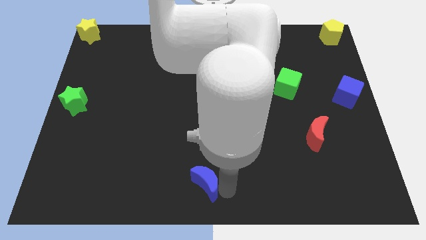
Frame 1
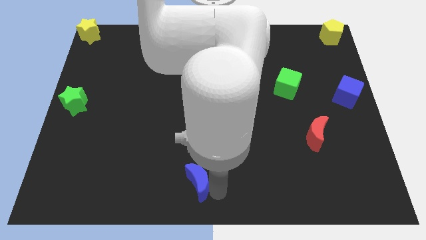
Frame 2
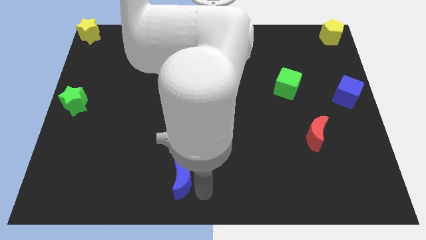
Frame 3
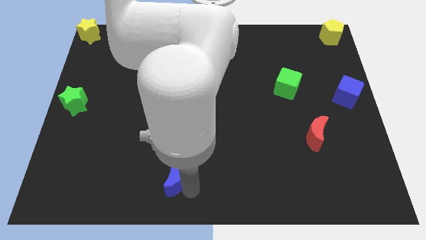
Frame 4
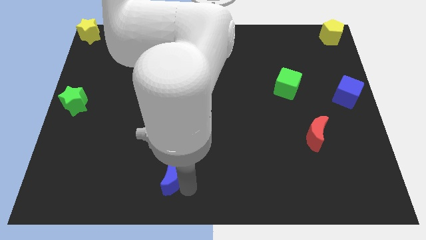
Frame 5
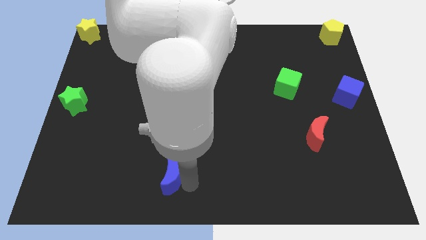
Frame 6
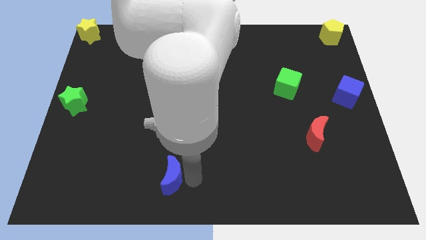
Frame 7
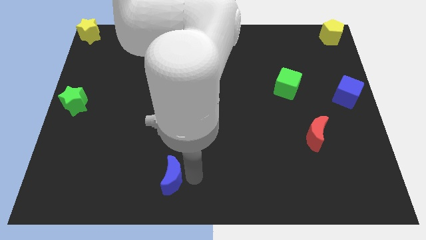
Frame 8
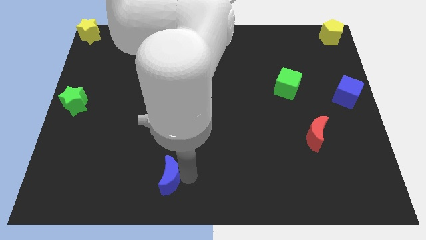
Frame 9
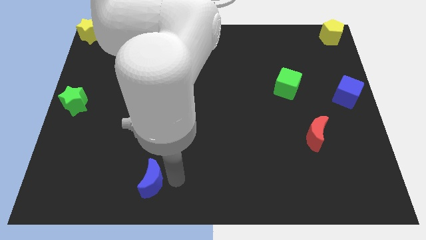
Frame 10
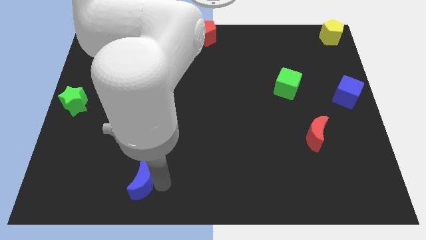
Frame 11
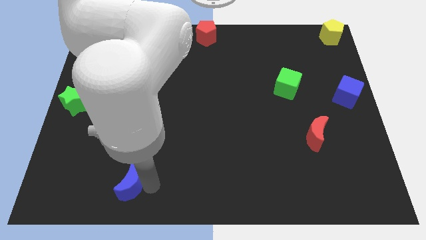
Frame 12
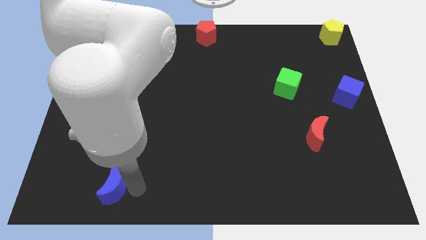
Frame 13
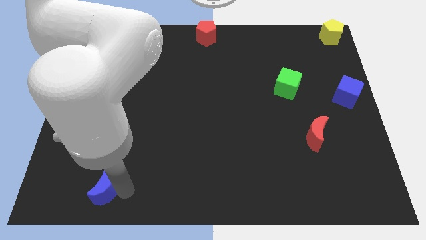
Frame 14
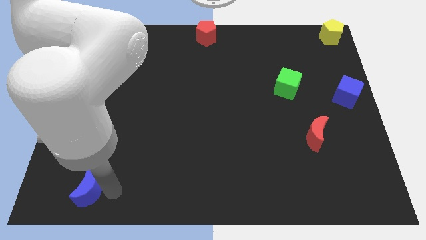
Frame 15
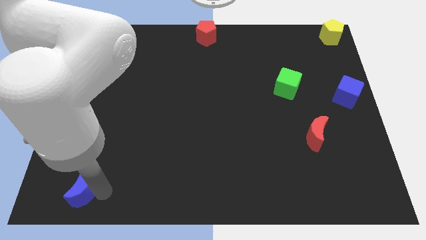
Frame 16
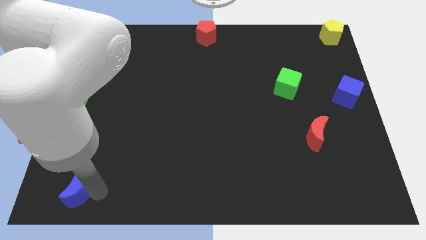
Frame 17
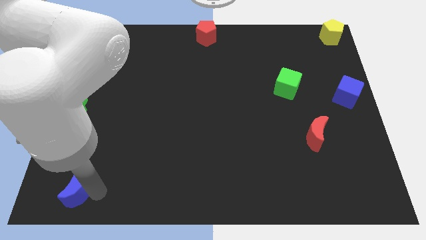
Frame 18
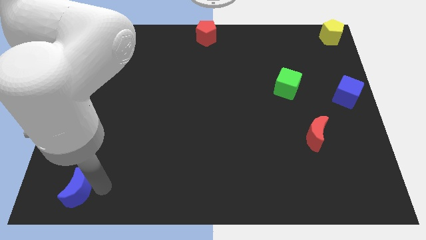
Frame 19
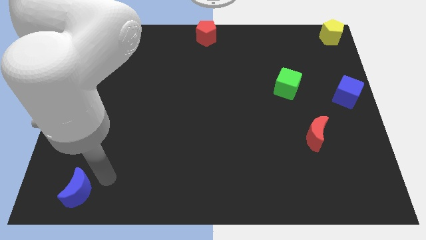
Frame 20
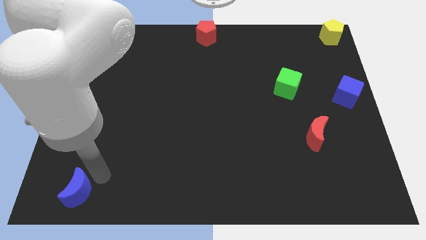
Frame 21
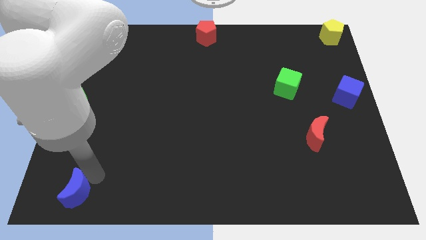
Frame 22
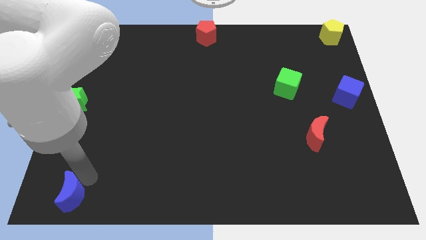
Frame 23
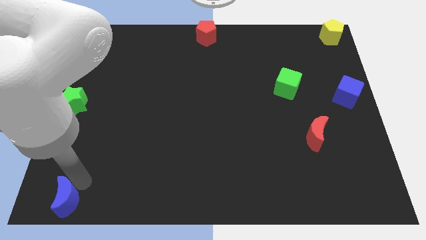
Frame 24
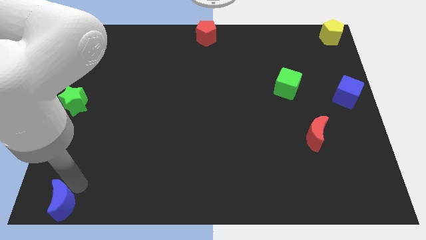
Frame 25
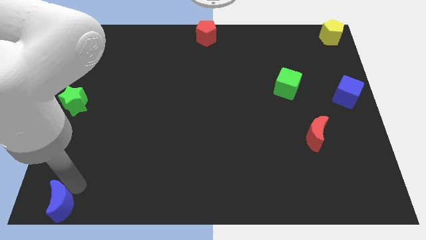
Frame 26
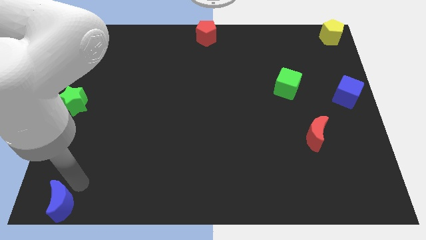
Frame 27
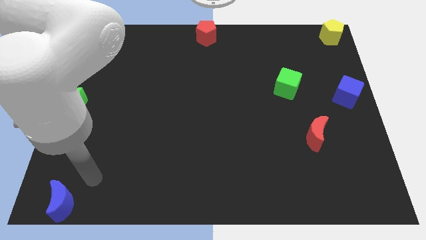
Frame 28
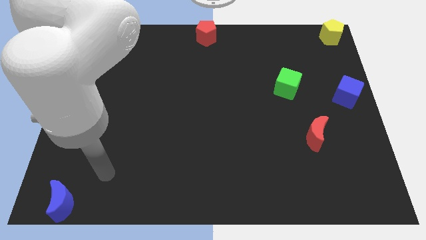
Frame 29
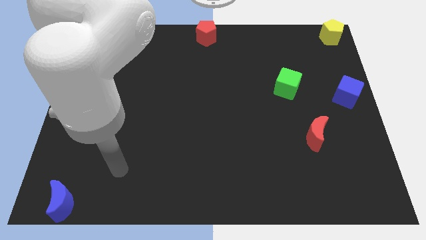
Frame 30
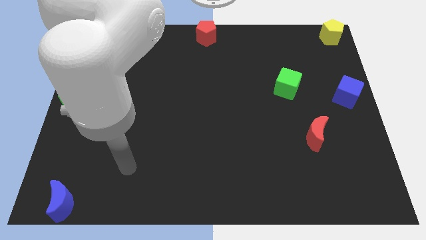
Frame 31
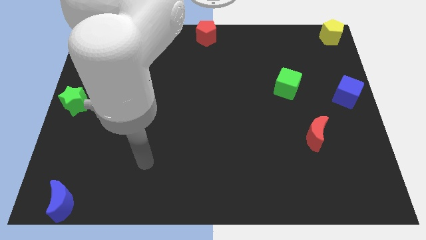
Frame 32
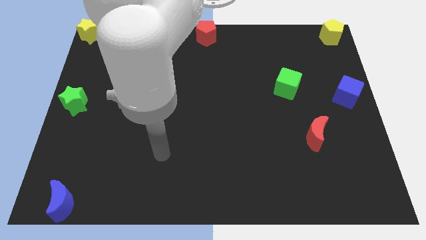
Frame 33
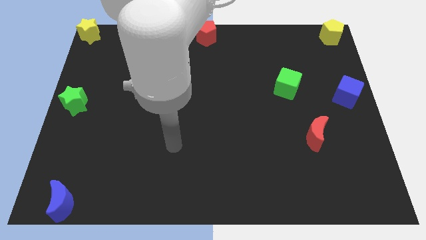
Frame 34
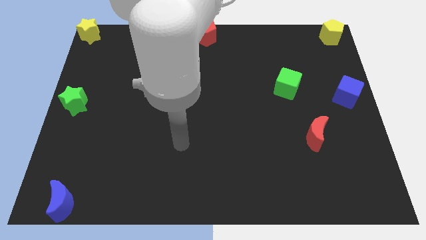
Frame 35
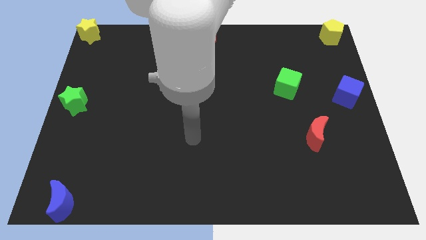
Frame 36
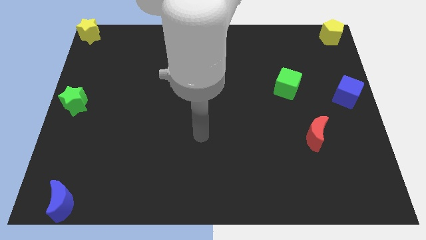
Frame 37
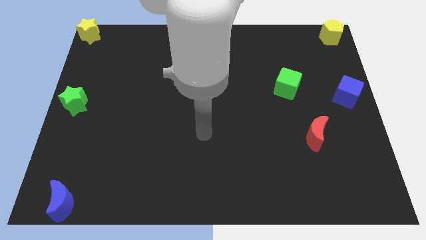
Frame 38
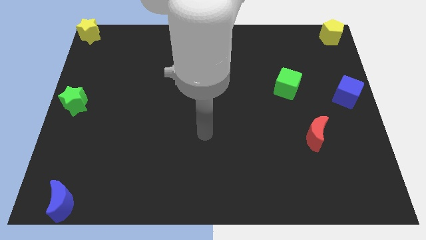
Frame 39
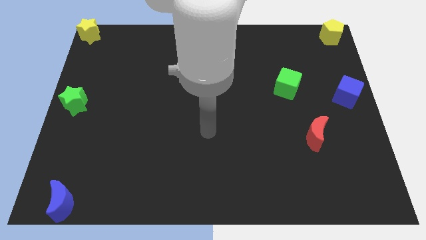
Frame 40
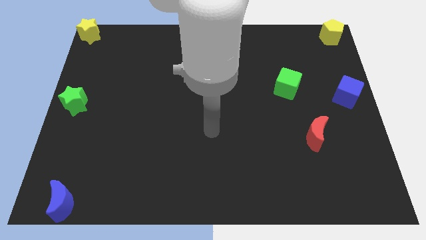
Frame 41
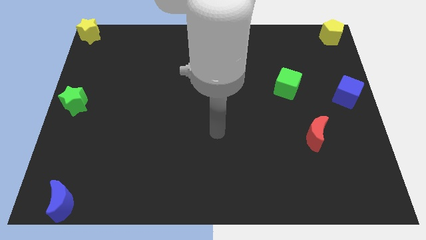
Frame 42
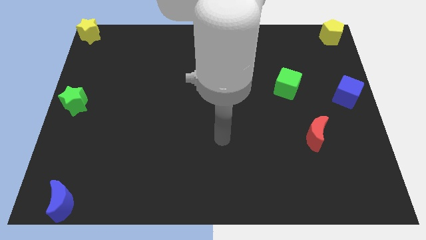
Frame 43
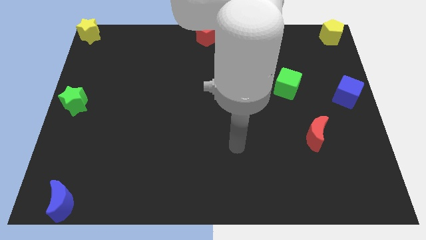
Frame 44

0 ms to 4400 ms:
drag the blue moon to the bottom left

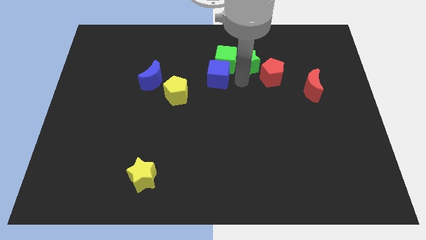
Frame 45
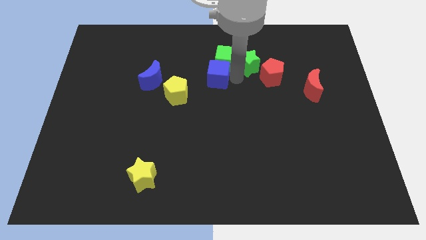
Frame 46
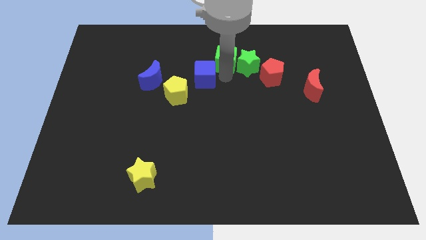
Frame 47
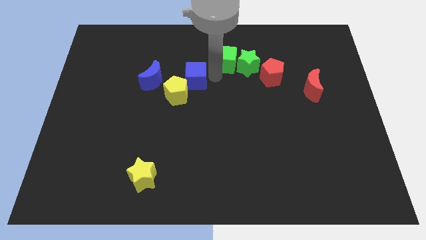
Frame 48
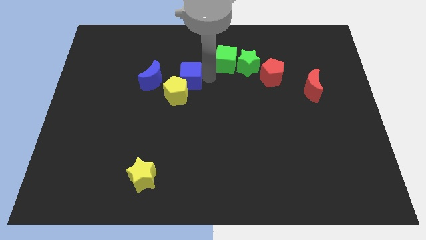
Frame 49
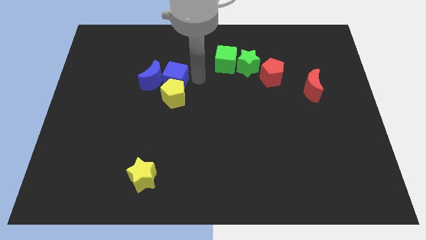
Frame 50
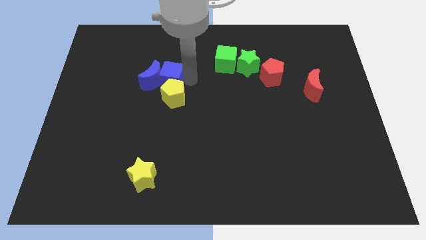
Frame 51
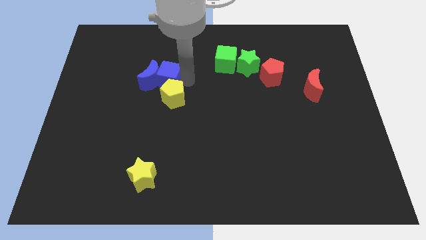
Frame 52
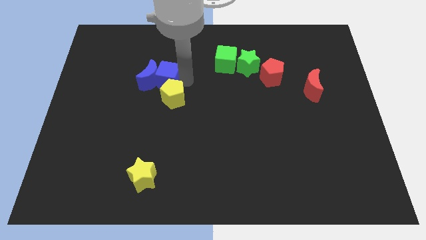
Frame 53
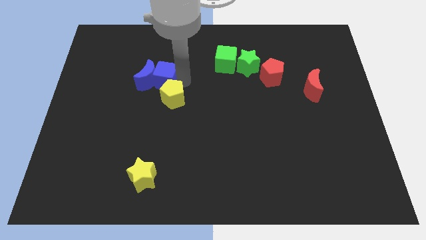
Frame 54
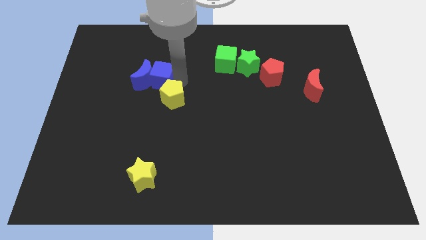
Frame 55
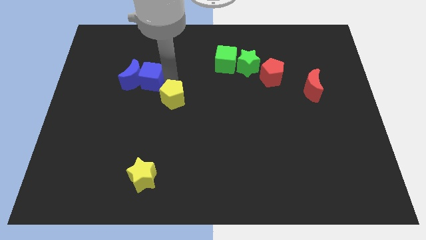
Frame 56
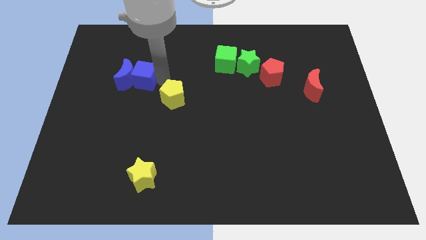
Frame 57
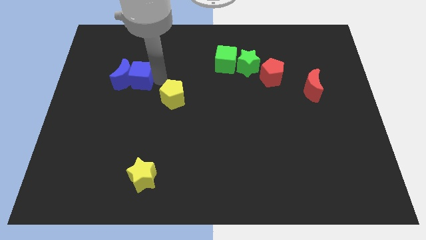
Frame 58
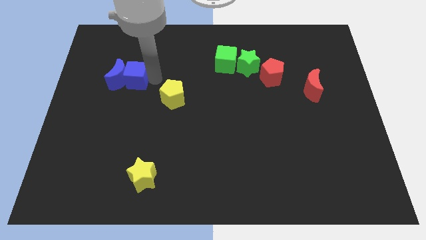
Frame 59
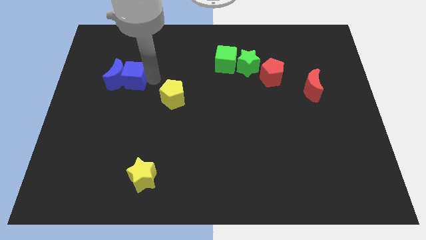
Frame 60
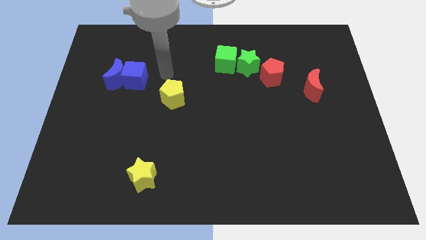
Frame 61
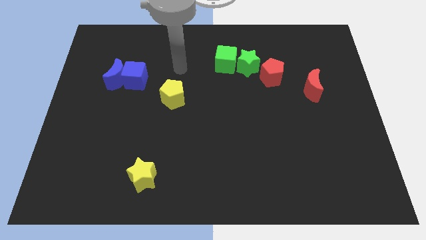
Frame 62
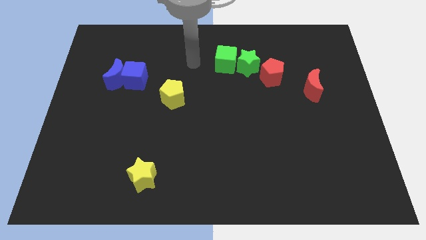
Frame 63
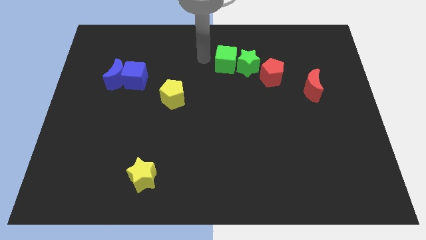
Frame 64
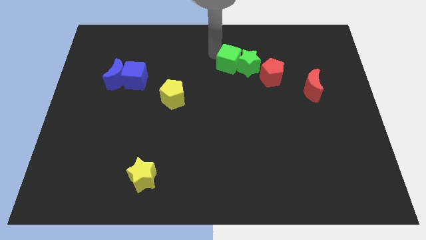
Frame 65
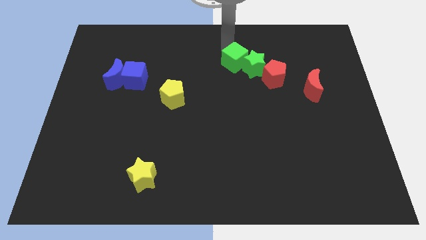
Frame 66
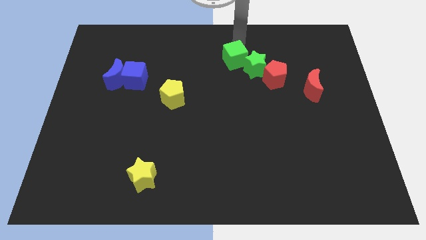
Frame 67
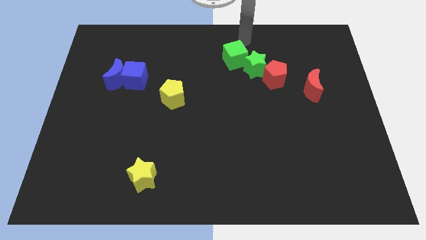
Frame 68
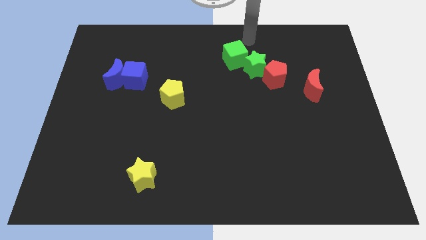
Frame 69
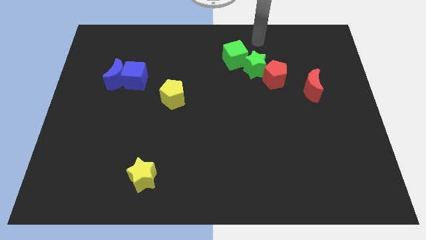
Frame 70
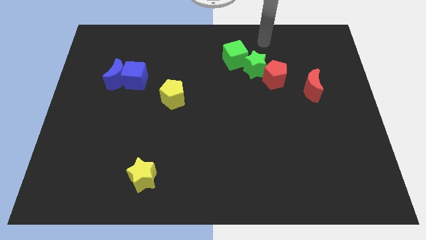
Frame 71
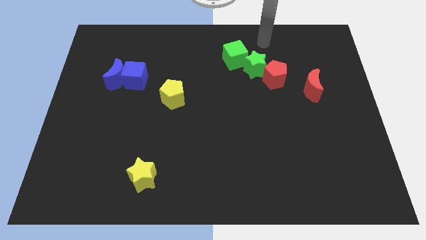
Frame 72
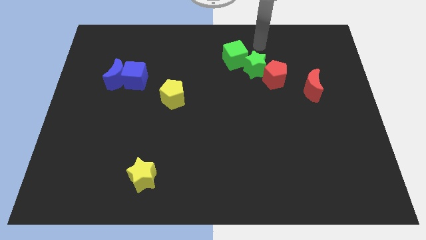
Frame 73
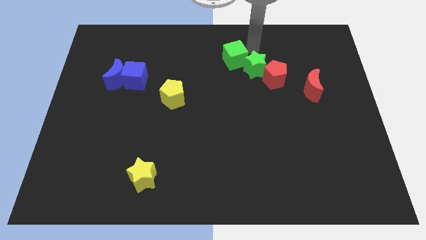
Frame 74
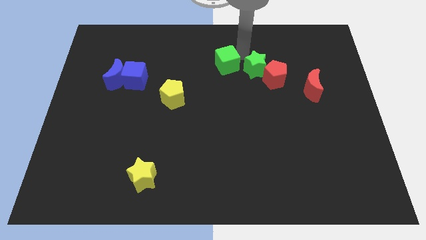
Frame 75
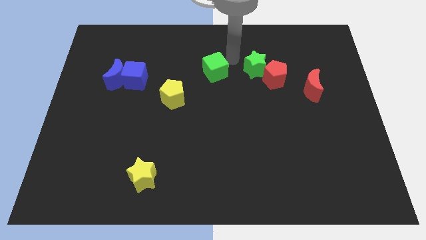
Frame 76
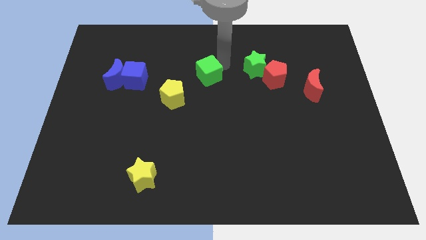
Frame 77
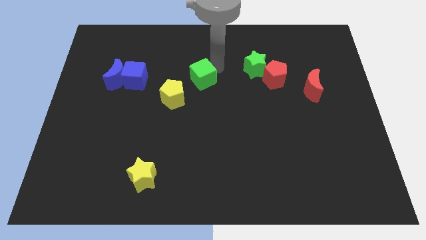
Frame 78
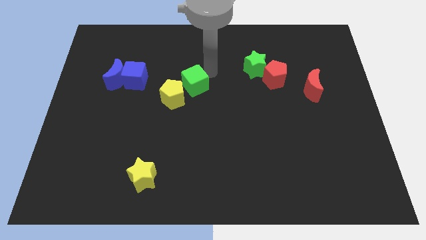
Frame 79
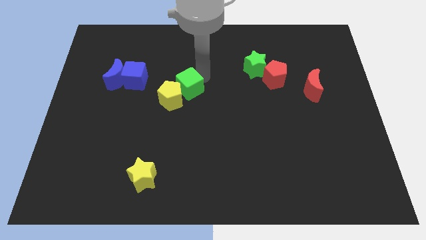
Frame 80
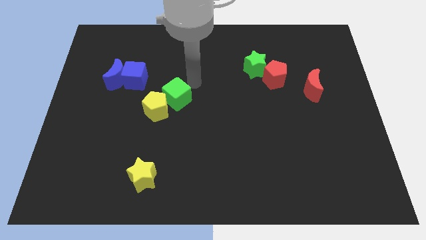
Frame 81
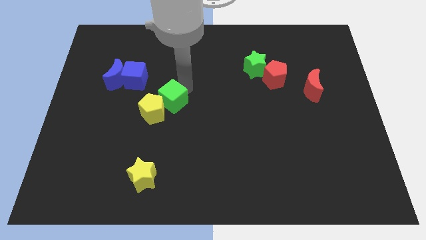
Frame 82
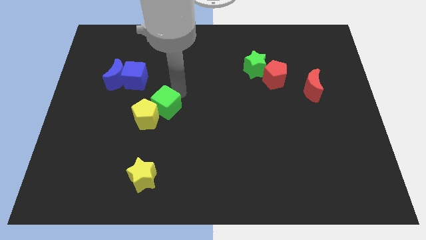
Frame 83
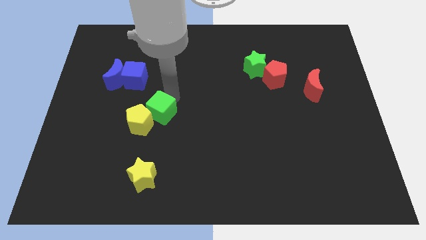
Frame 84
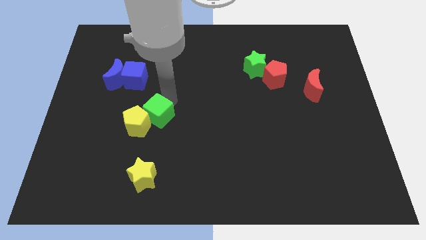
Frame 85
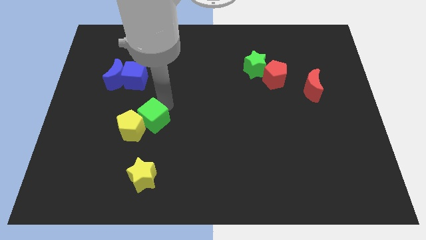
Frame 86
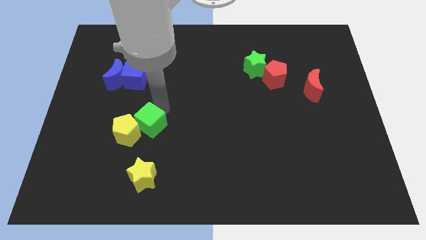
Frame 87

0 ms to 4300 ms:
push blue blocks towards left corner of board and green cube towards bottom side of the board

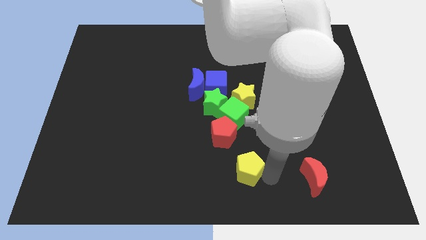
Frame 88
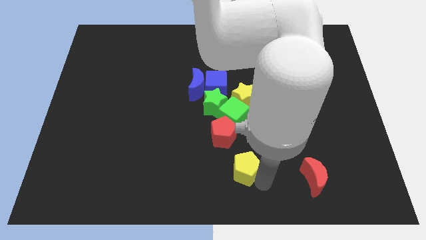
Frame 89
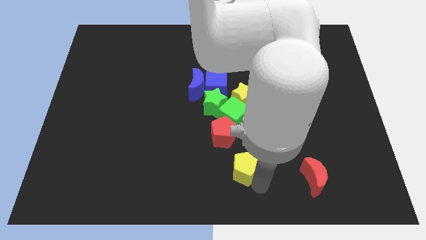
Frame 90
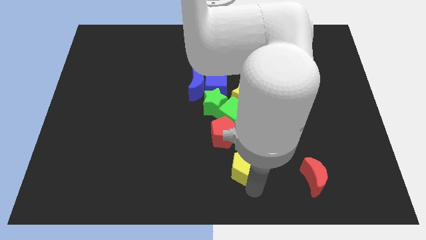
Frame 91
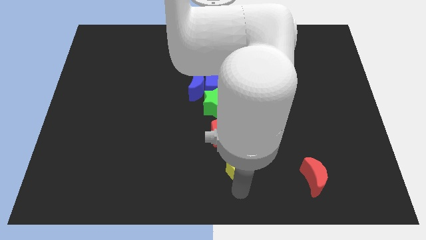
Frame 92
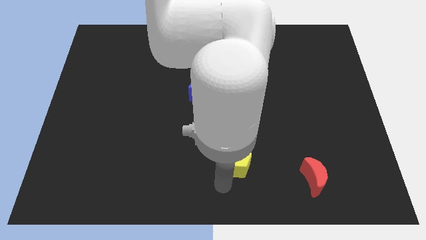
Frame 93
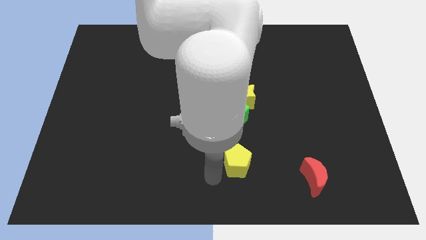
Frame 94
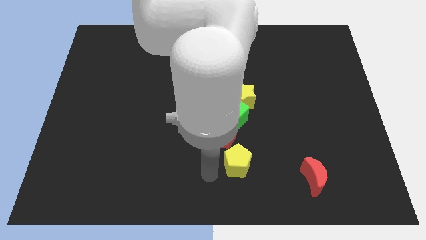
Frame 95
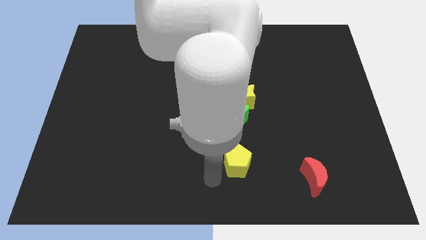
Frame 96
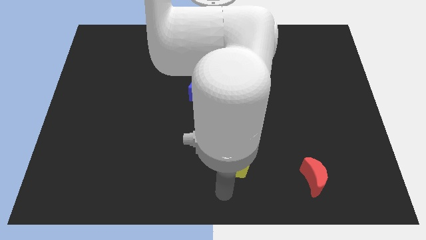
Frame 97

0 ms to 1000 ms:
move the yellow pentagon diagonally to the bottom right of red pentagon
